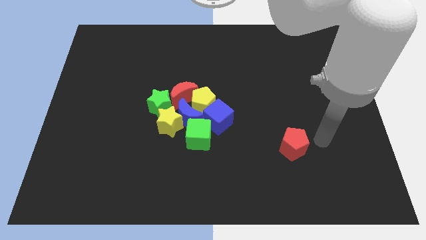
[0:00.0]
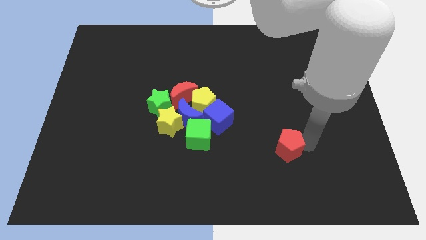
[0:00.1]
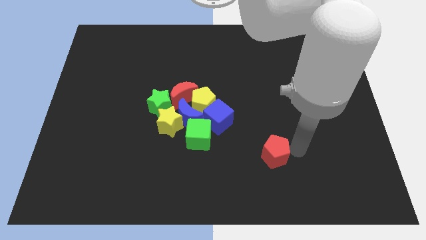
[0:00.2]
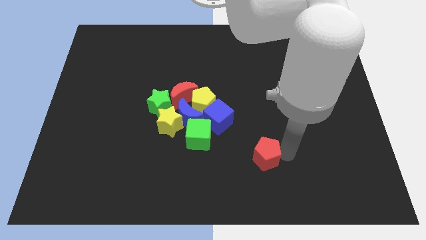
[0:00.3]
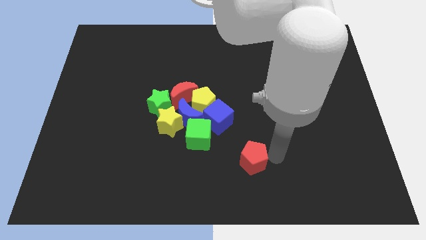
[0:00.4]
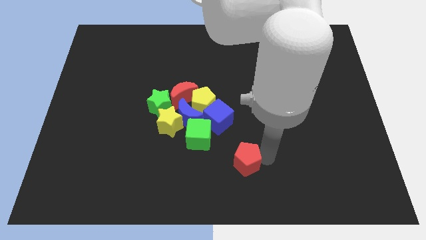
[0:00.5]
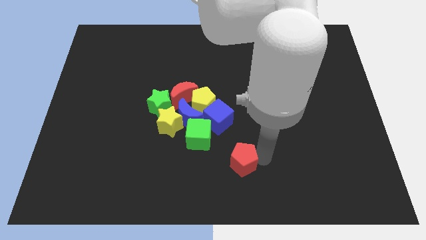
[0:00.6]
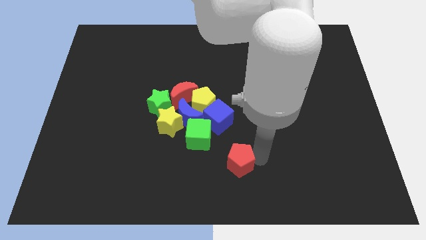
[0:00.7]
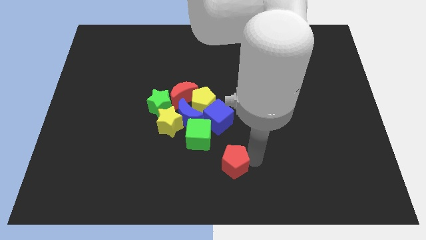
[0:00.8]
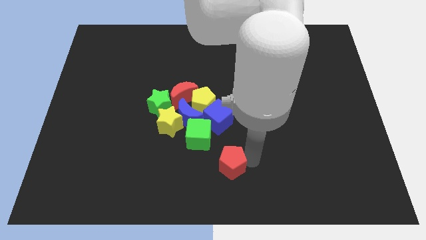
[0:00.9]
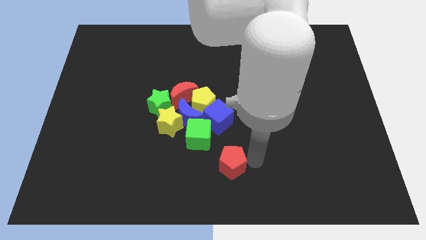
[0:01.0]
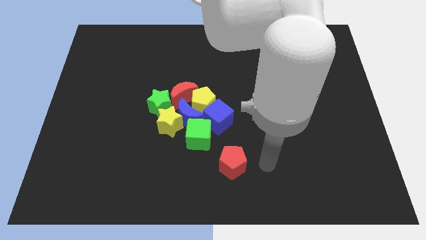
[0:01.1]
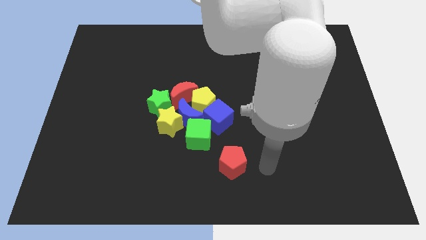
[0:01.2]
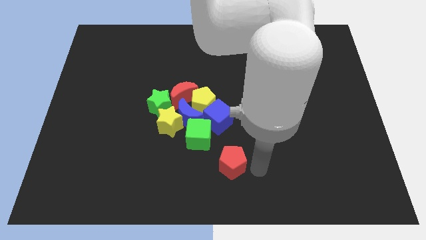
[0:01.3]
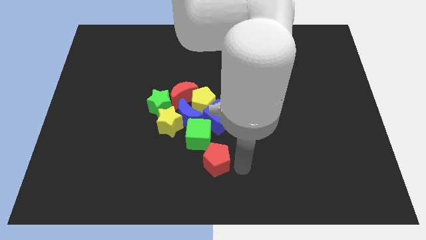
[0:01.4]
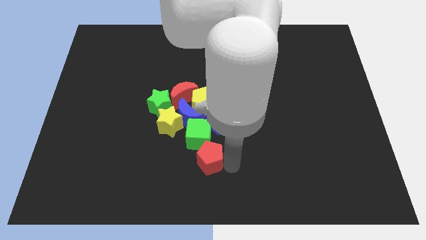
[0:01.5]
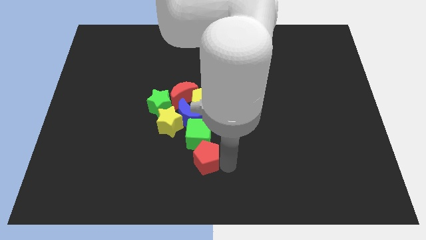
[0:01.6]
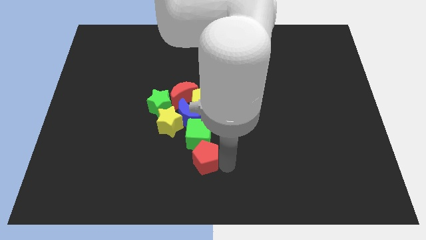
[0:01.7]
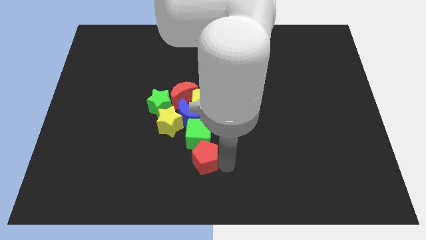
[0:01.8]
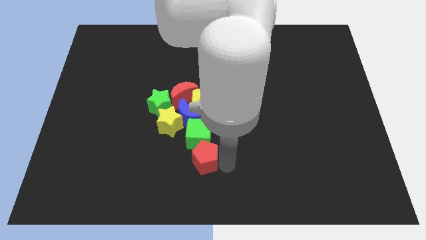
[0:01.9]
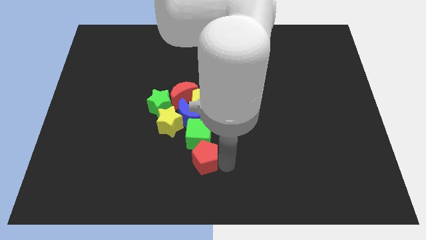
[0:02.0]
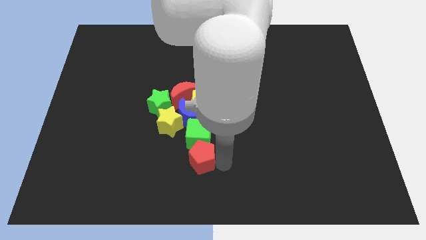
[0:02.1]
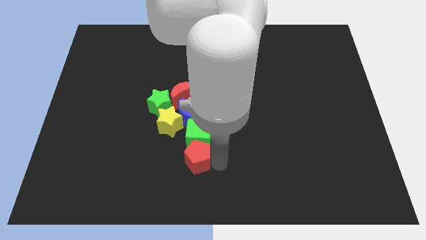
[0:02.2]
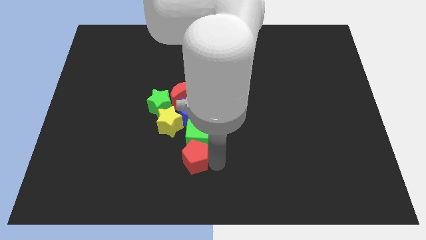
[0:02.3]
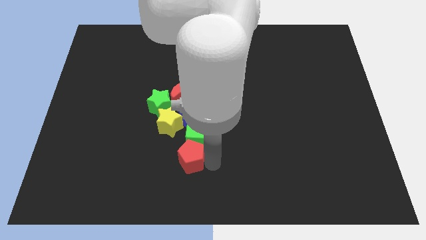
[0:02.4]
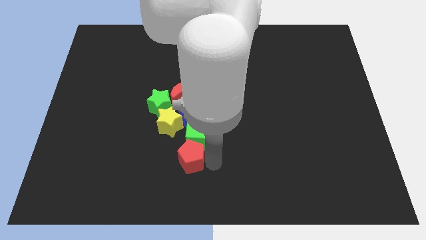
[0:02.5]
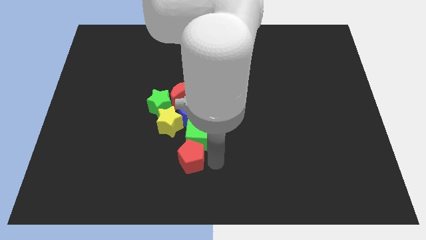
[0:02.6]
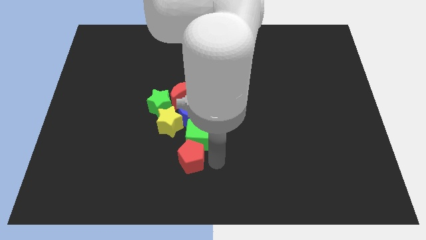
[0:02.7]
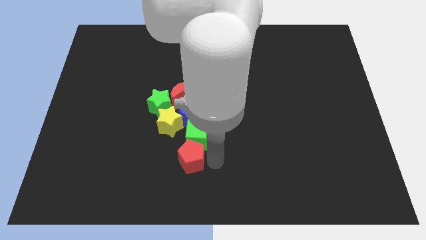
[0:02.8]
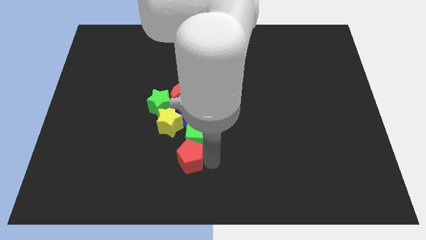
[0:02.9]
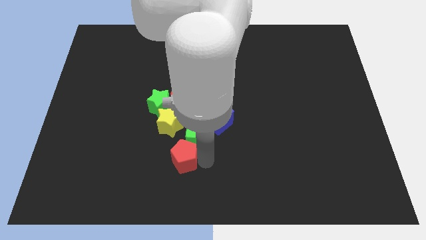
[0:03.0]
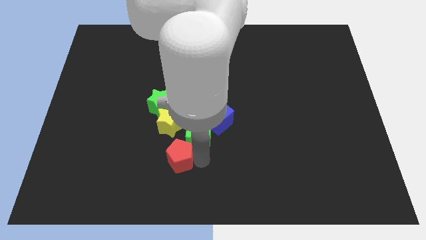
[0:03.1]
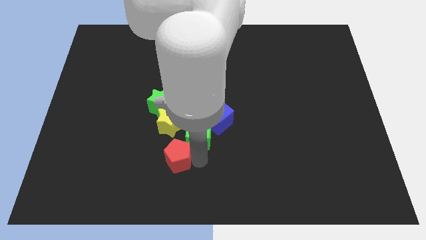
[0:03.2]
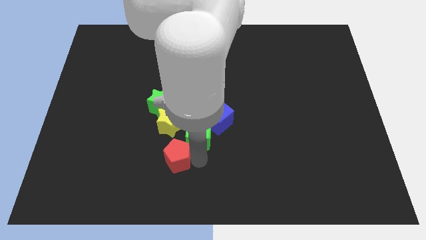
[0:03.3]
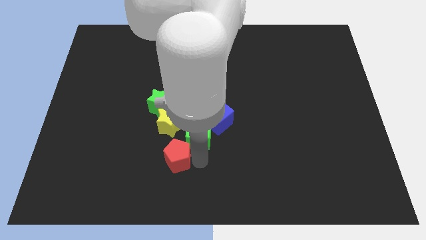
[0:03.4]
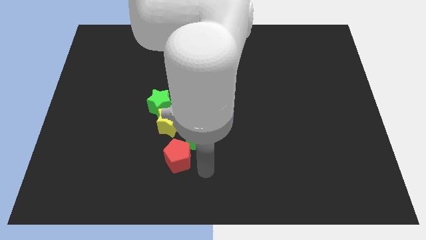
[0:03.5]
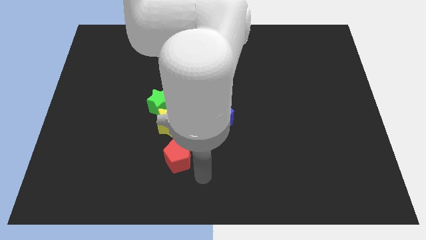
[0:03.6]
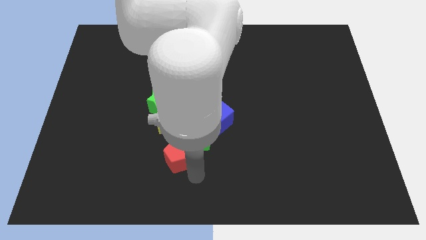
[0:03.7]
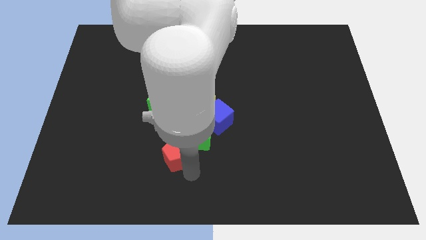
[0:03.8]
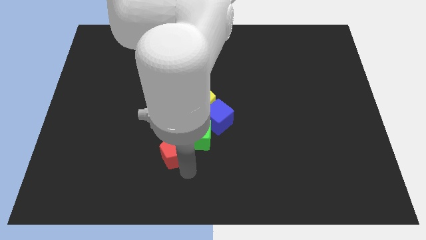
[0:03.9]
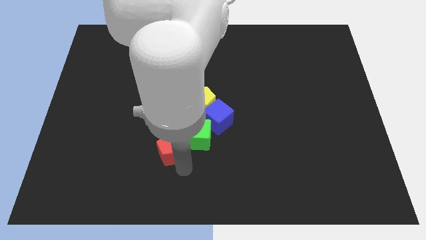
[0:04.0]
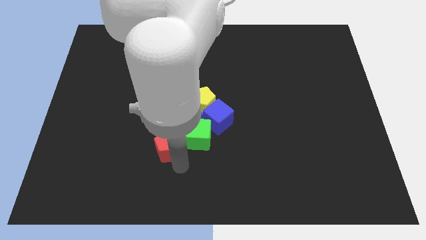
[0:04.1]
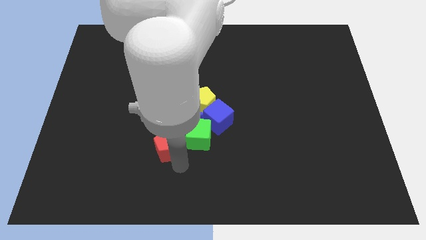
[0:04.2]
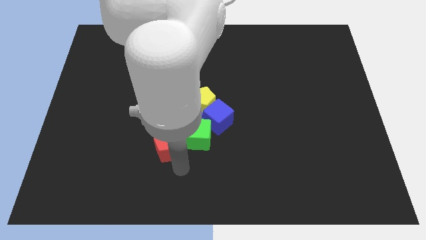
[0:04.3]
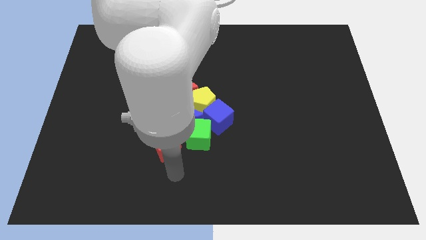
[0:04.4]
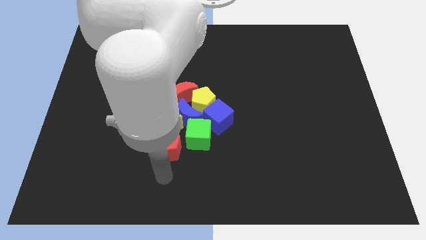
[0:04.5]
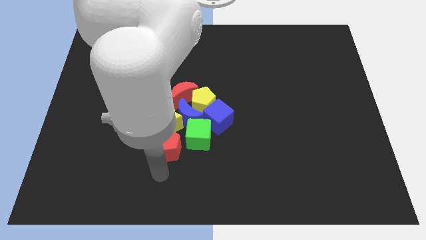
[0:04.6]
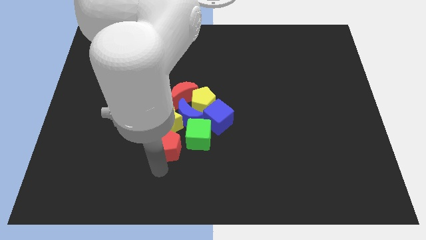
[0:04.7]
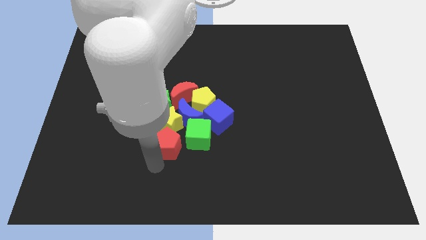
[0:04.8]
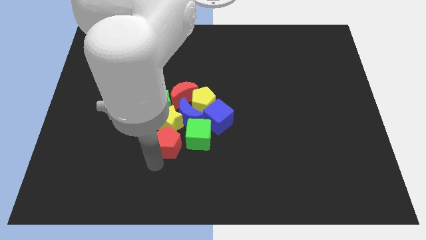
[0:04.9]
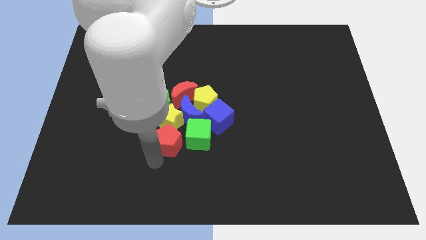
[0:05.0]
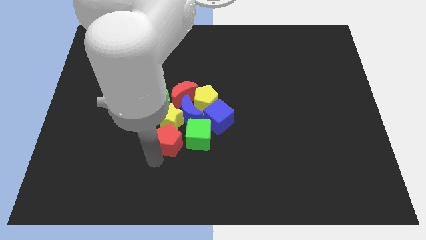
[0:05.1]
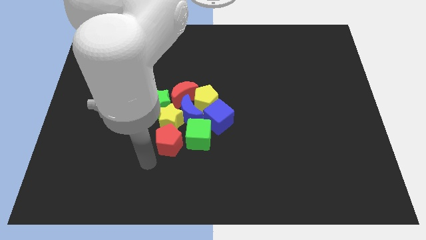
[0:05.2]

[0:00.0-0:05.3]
move the red pentagon into the yellow star

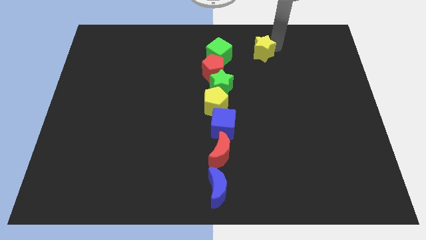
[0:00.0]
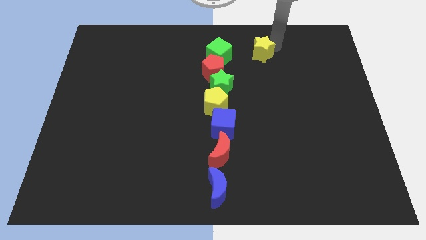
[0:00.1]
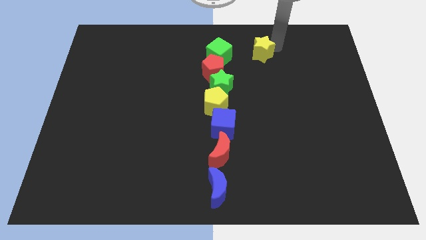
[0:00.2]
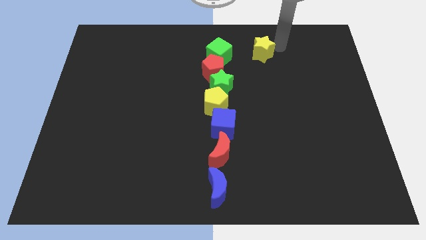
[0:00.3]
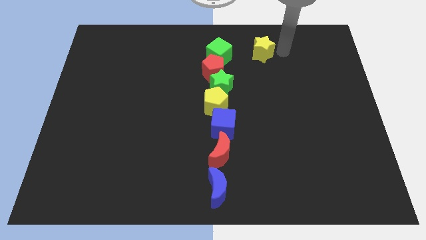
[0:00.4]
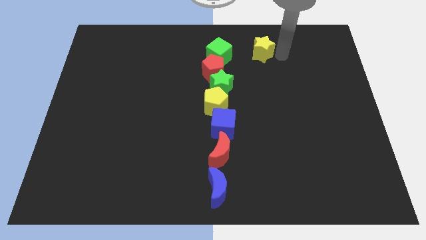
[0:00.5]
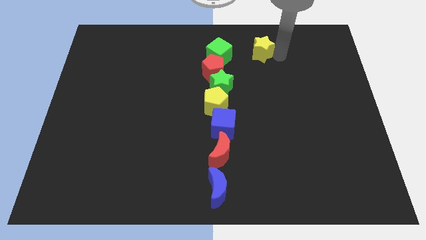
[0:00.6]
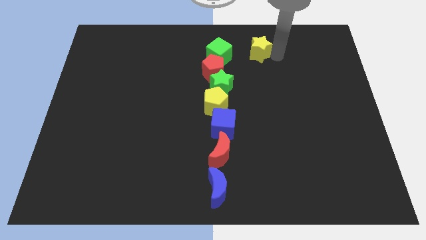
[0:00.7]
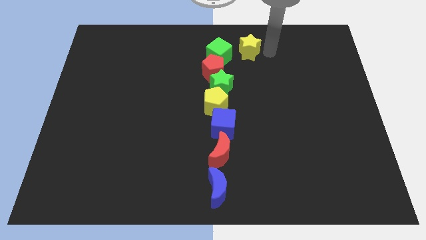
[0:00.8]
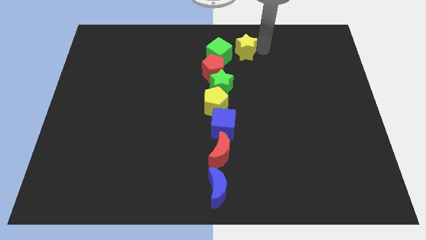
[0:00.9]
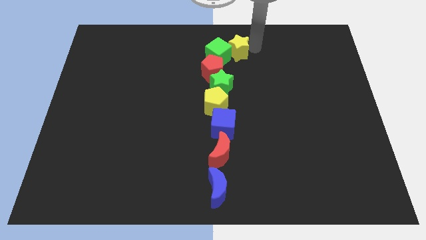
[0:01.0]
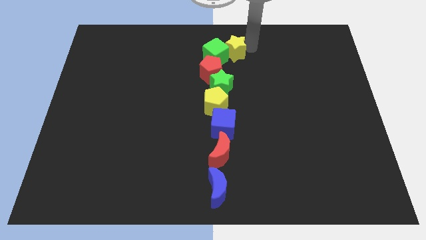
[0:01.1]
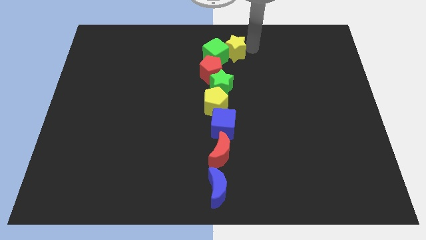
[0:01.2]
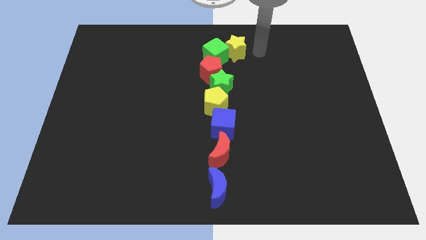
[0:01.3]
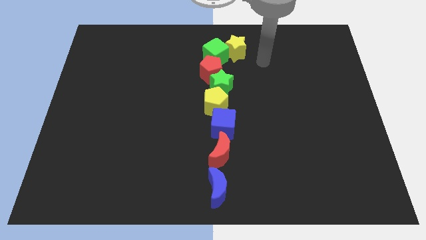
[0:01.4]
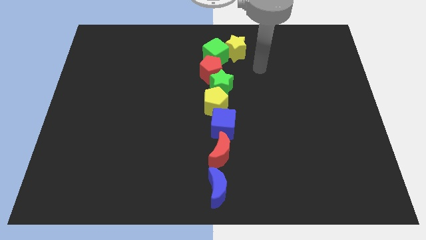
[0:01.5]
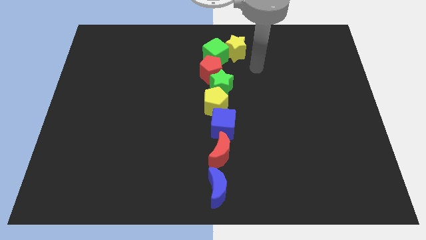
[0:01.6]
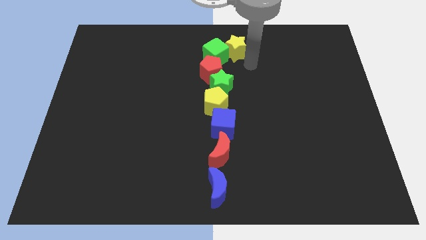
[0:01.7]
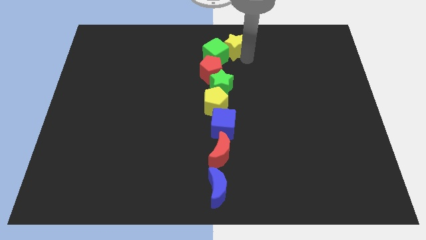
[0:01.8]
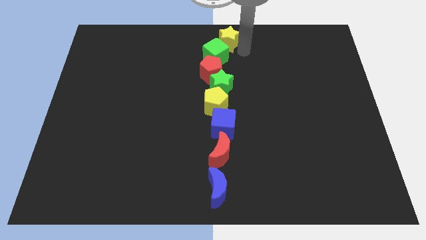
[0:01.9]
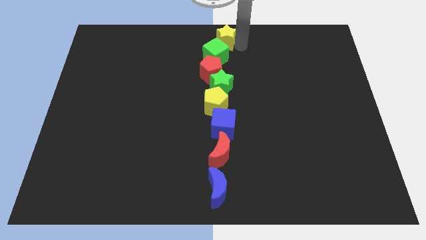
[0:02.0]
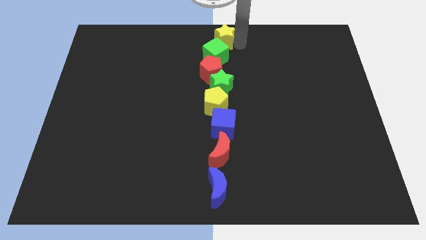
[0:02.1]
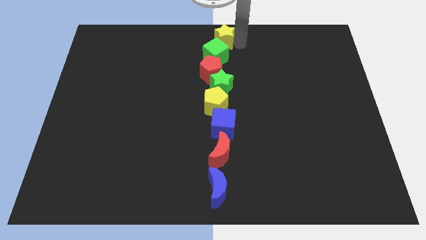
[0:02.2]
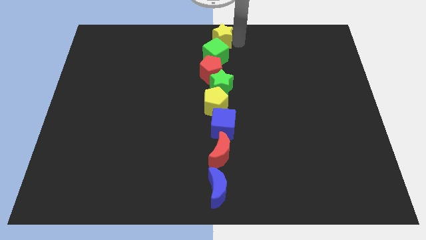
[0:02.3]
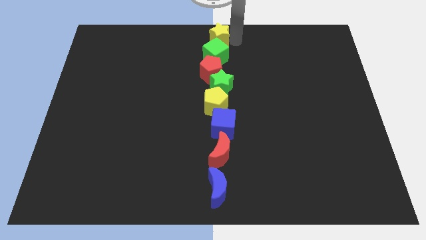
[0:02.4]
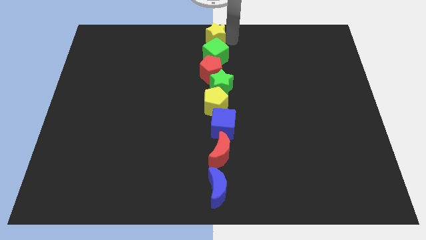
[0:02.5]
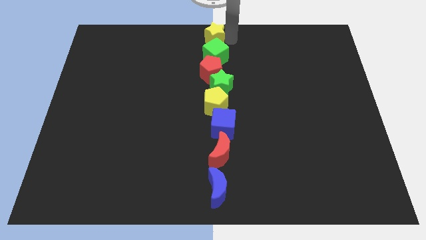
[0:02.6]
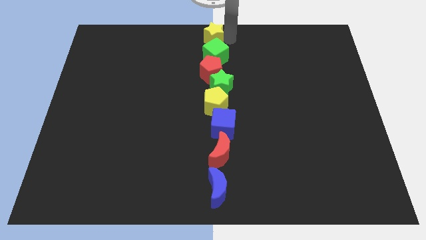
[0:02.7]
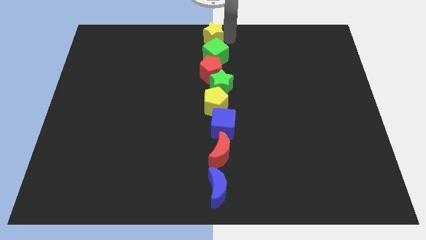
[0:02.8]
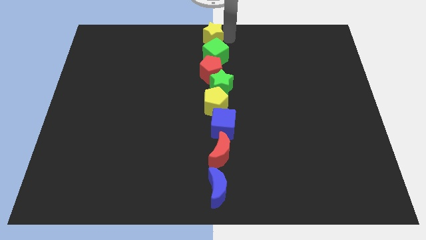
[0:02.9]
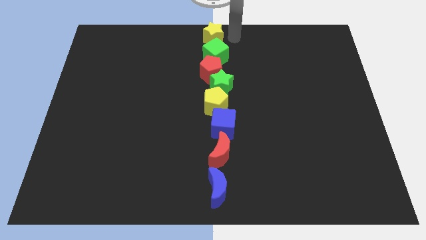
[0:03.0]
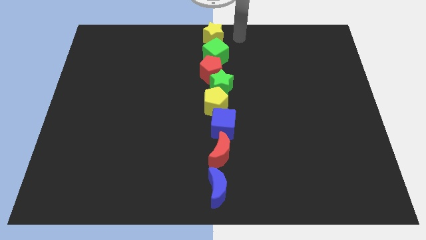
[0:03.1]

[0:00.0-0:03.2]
move the yellow star at the top center of the board

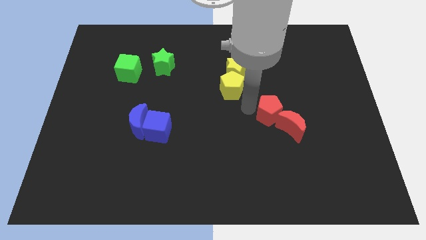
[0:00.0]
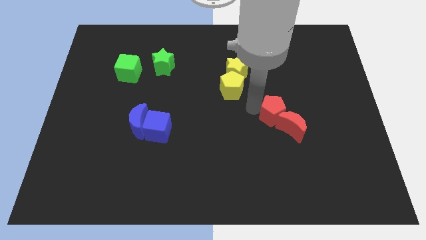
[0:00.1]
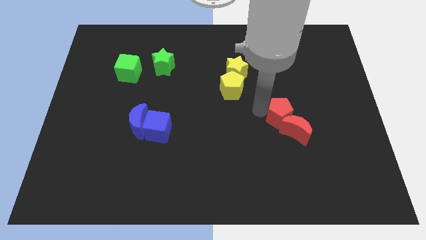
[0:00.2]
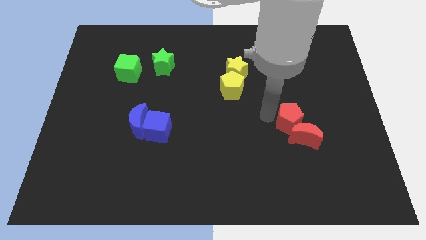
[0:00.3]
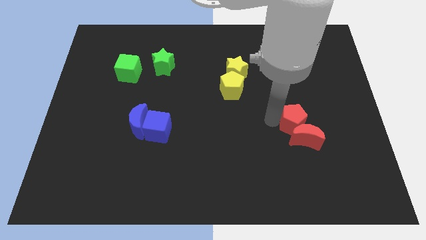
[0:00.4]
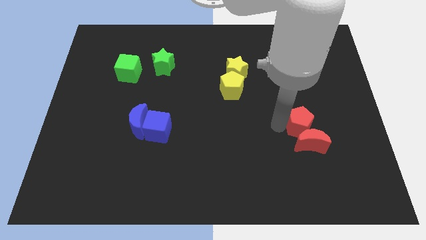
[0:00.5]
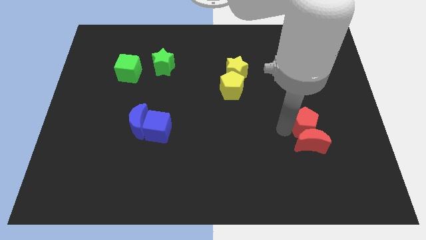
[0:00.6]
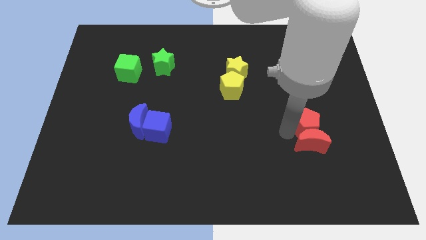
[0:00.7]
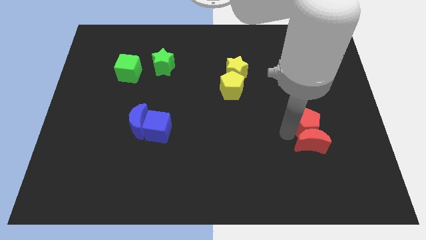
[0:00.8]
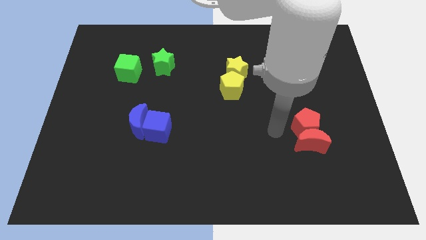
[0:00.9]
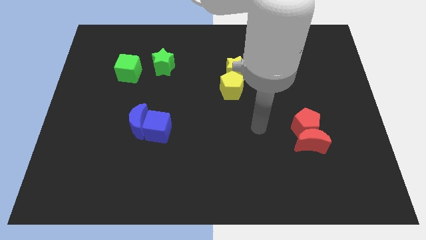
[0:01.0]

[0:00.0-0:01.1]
push the red pentagon into the red moon
